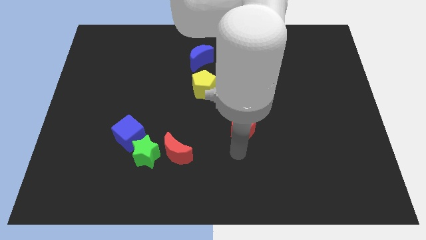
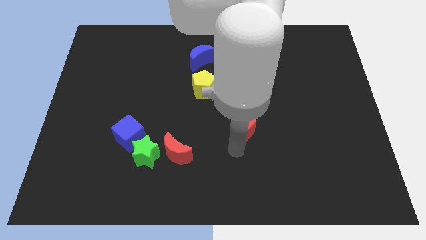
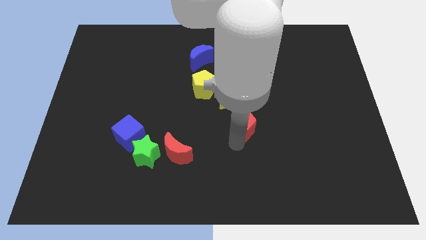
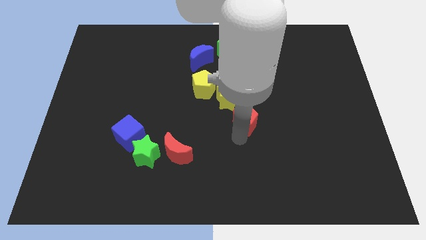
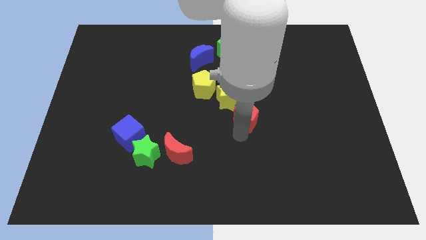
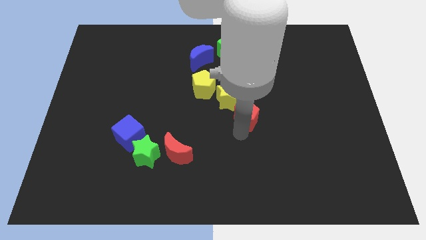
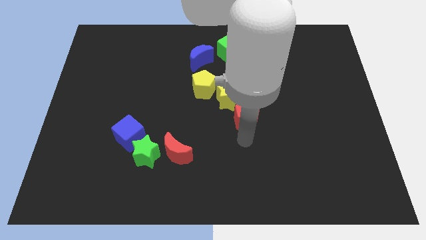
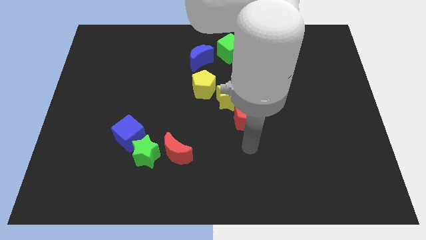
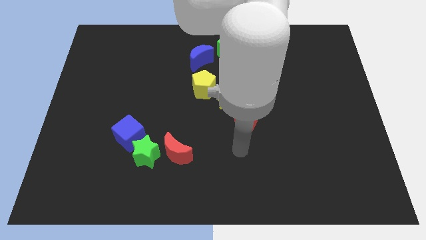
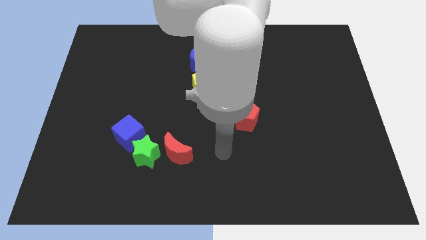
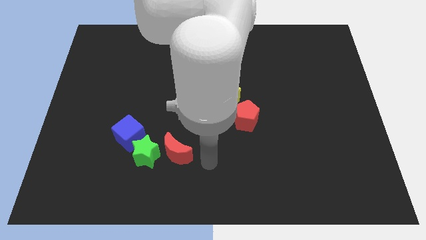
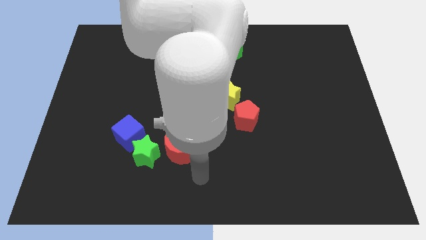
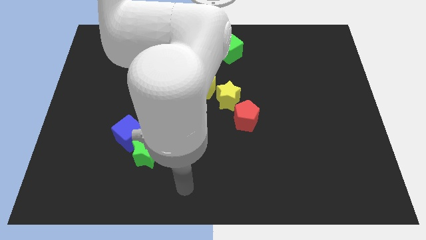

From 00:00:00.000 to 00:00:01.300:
move the red pentagon close to the bottom right of the yellow star

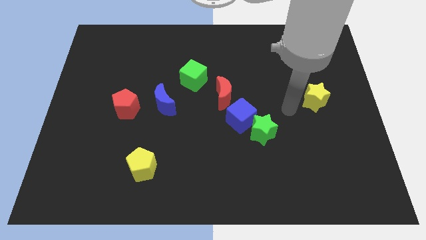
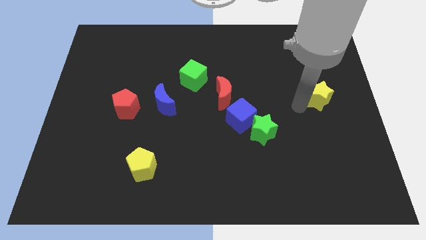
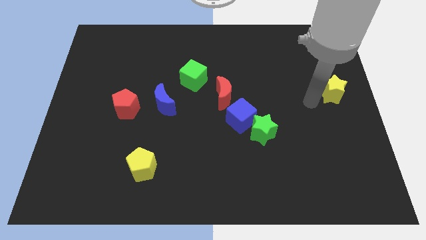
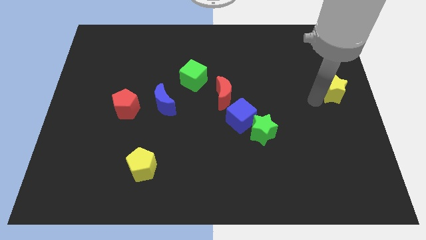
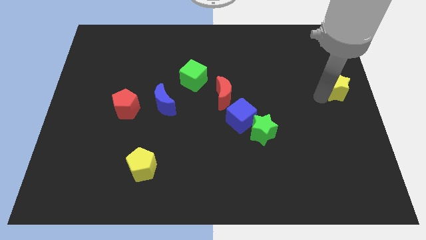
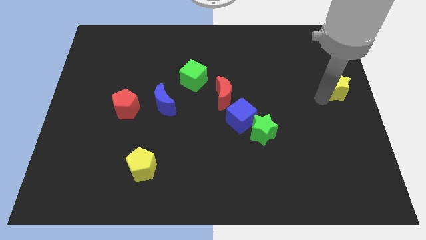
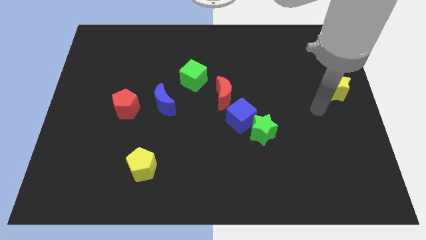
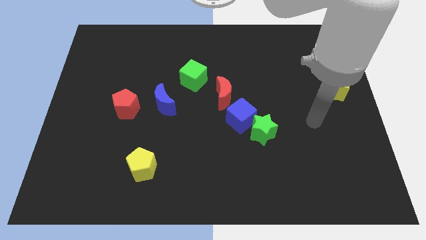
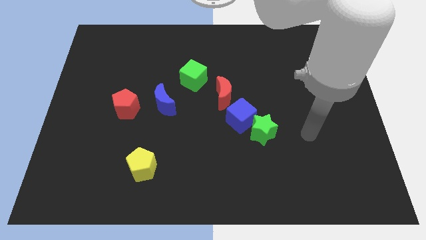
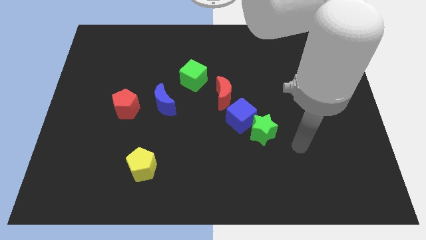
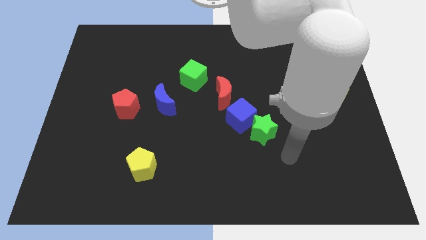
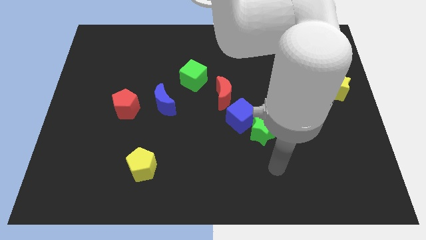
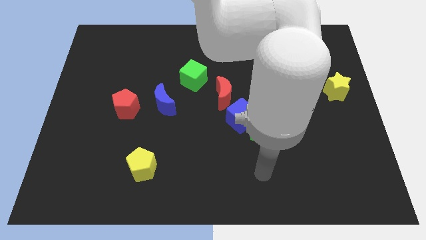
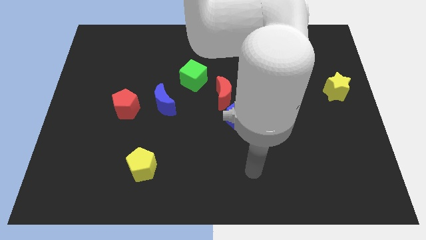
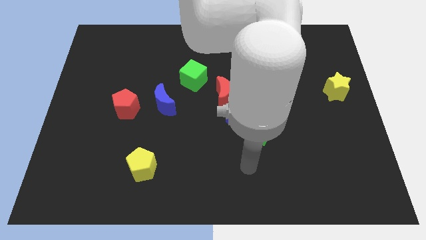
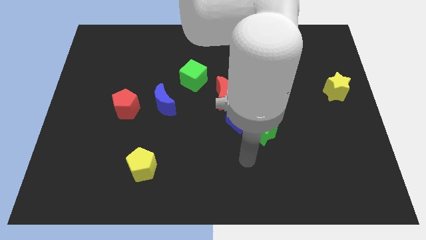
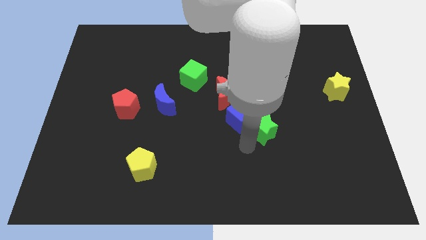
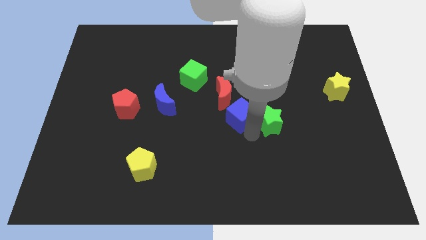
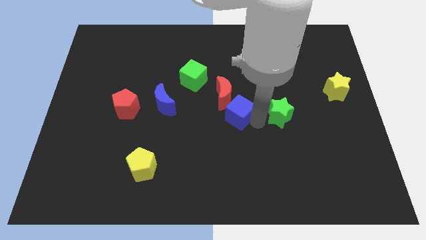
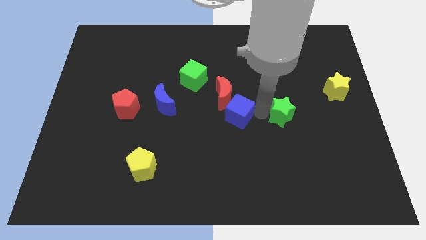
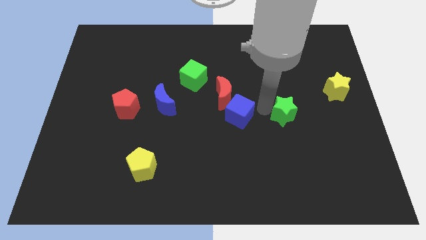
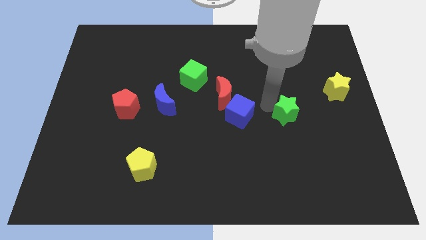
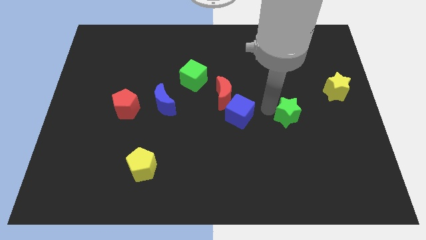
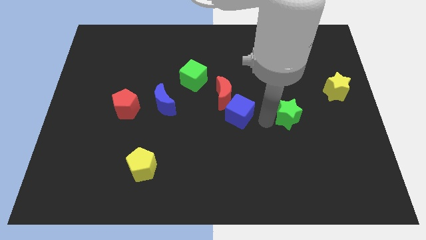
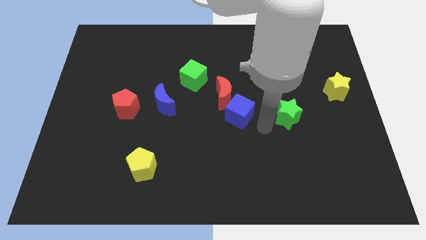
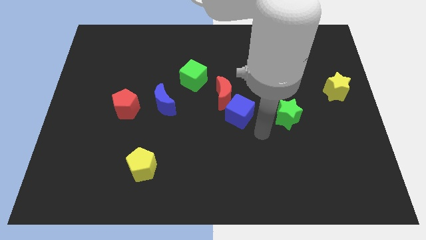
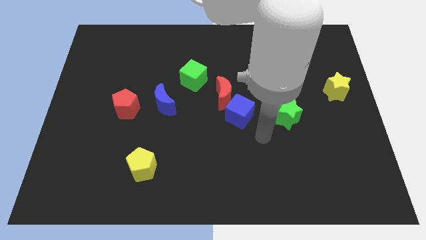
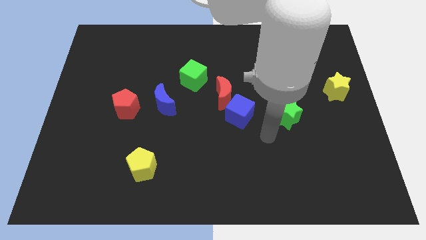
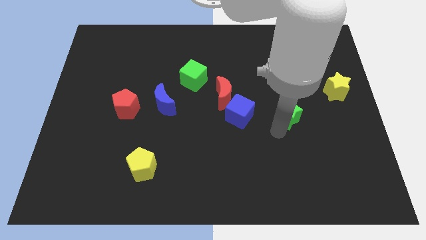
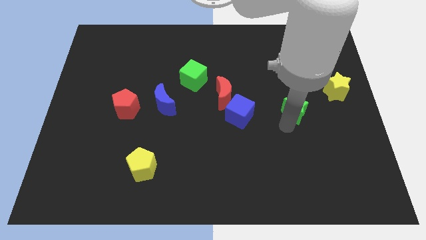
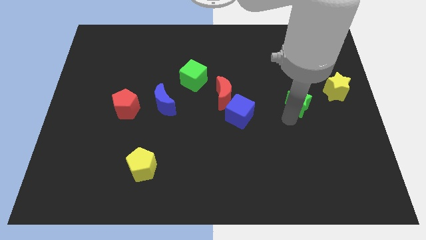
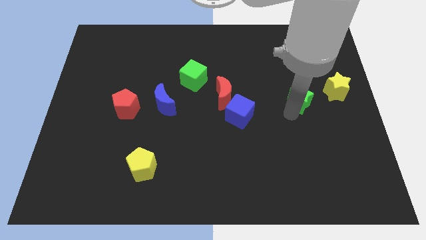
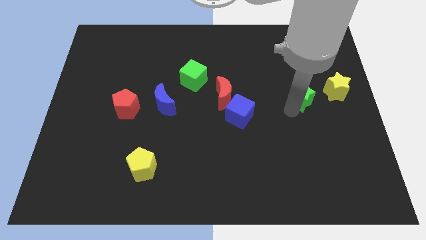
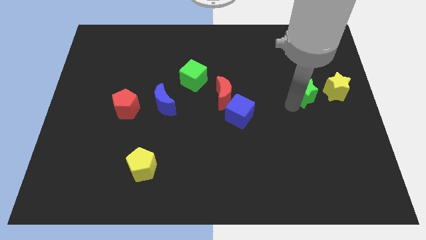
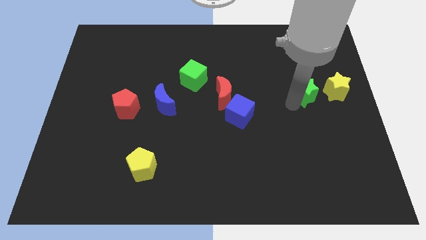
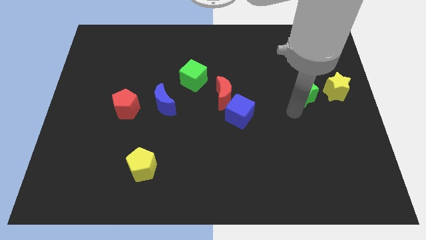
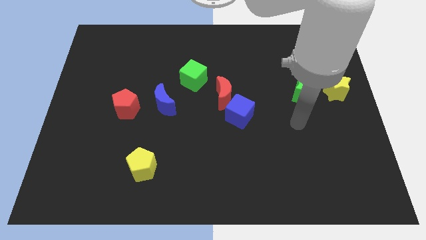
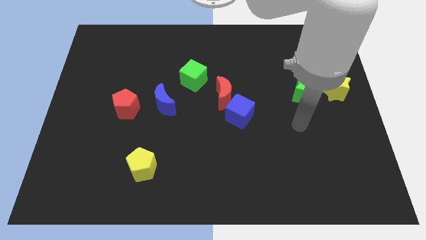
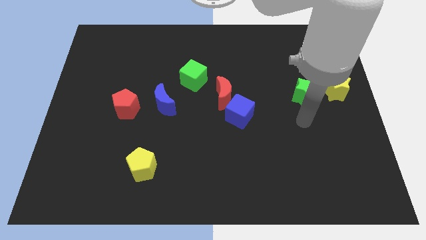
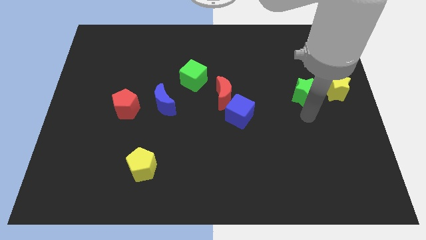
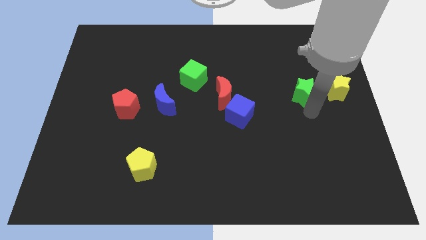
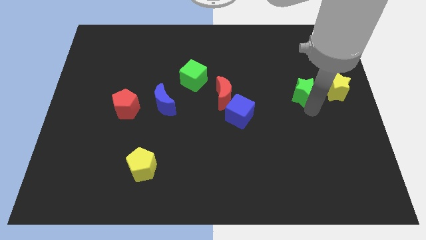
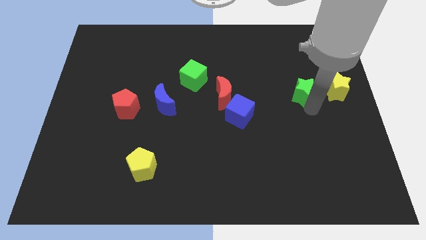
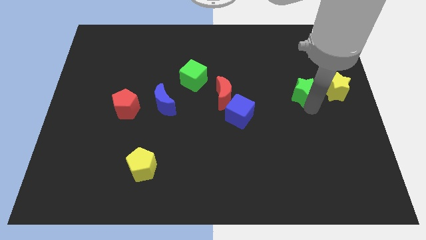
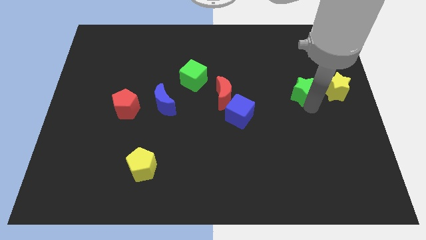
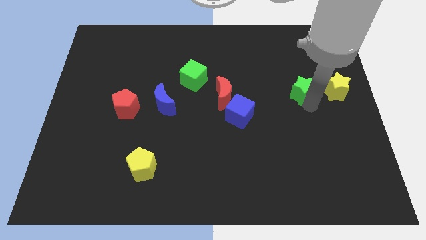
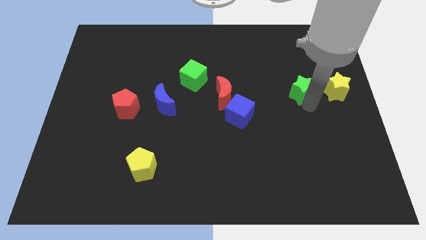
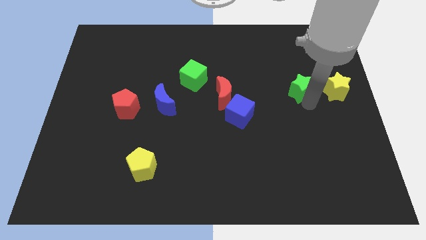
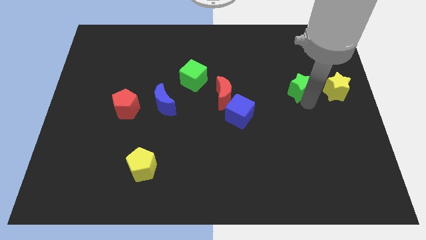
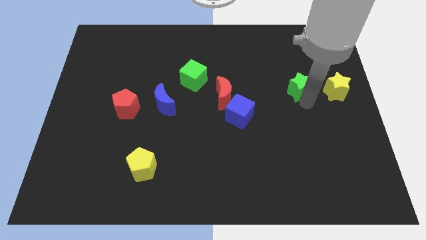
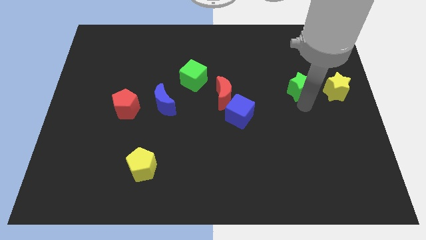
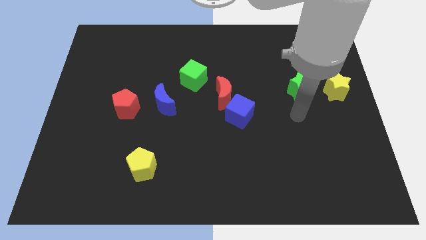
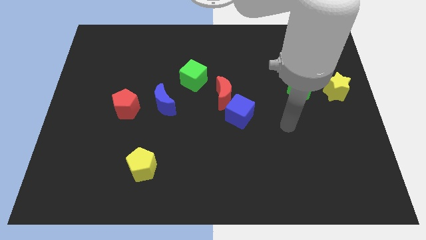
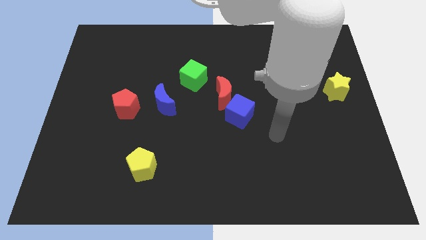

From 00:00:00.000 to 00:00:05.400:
move the green star parallel on the right side of the yellow star

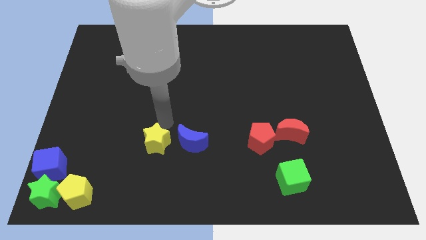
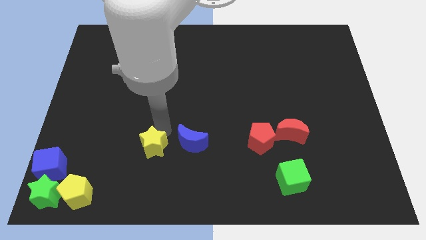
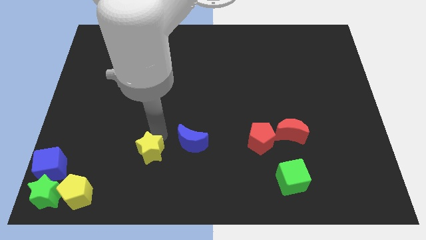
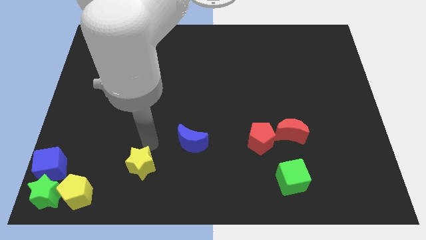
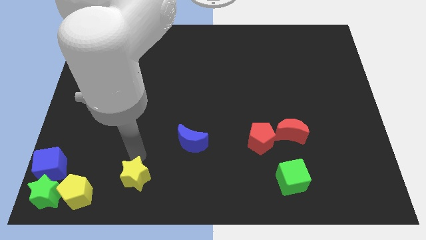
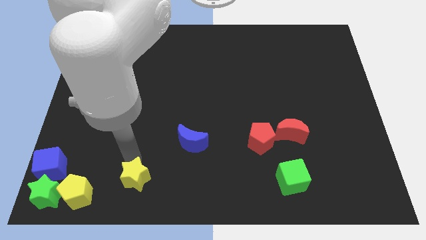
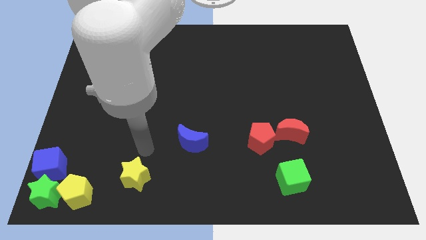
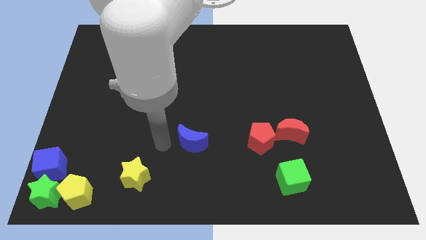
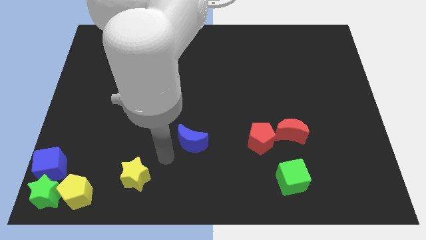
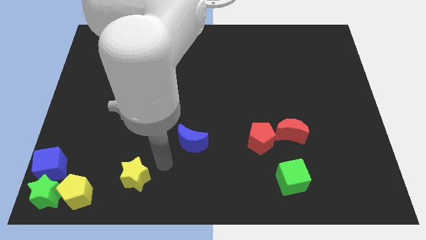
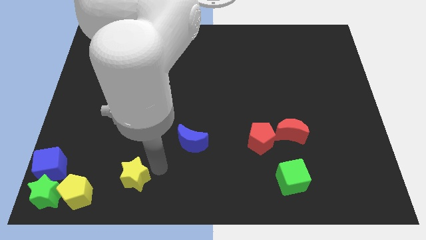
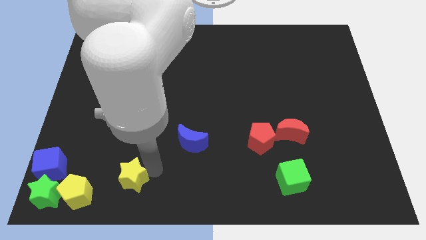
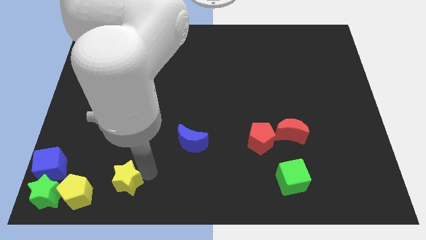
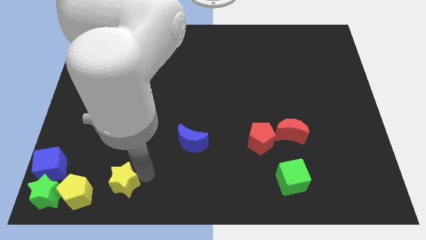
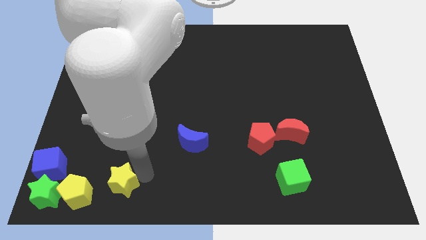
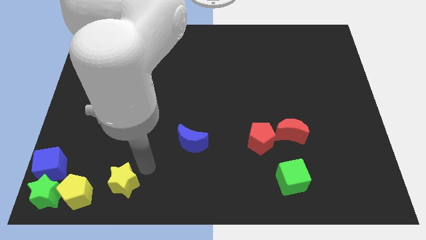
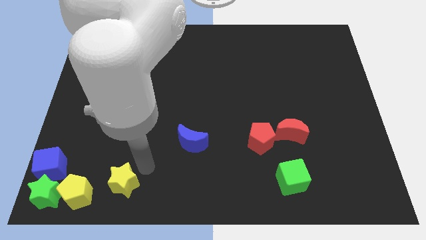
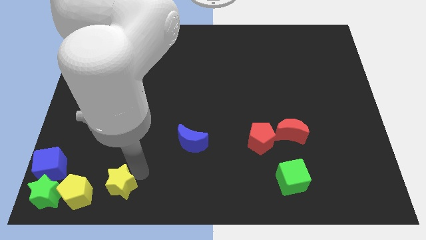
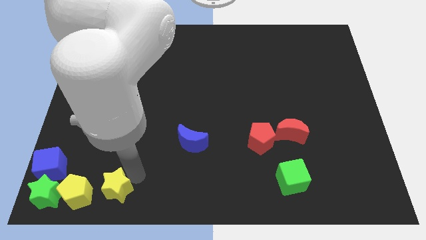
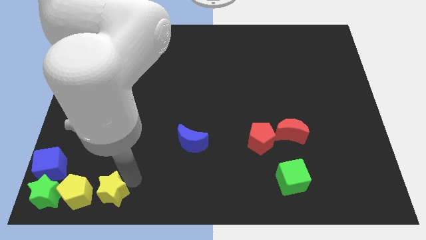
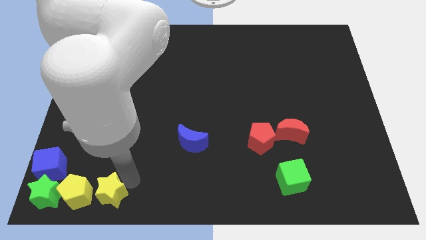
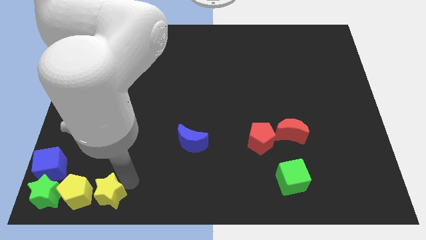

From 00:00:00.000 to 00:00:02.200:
put the yellow star on the right side of the yellow pentagon
